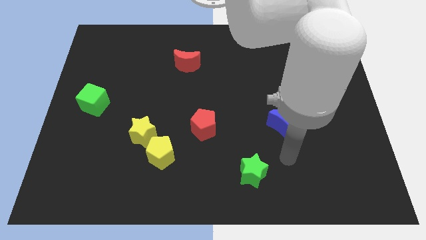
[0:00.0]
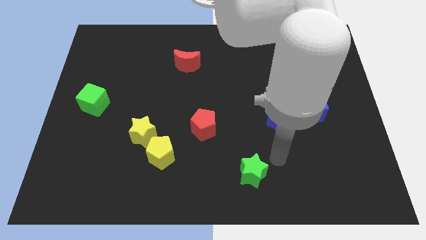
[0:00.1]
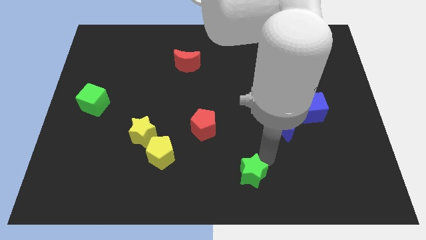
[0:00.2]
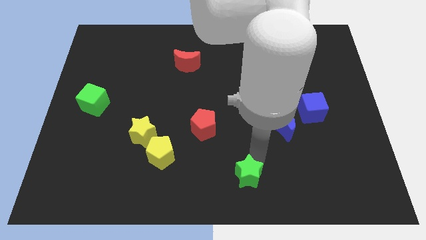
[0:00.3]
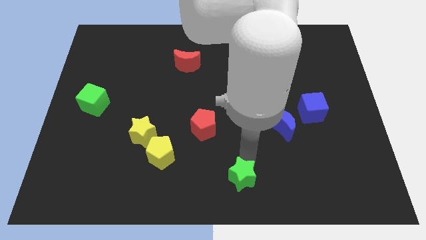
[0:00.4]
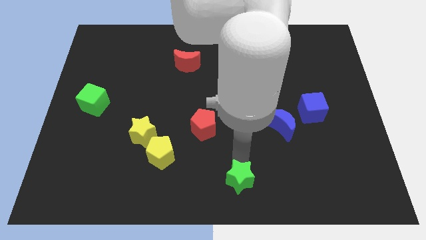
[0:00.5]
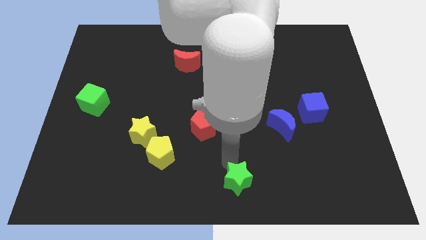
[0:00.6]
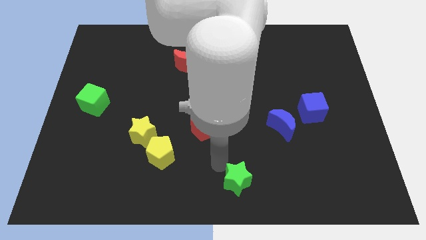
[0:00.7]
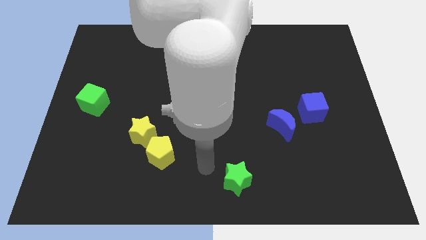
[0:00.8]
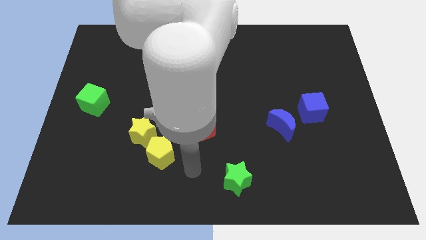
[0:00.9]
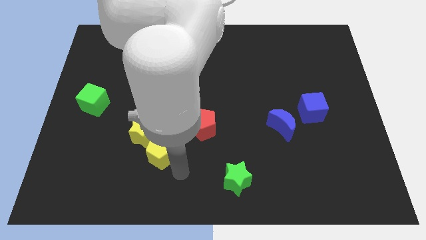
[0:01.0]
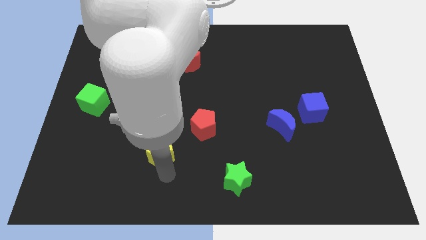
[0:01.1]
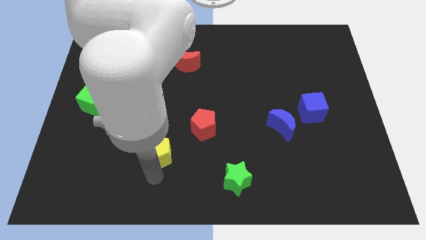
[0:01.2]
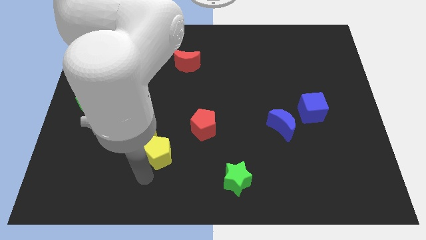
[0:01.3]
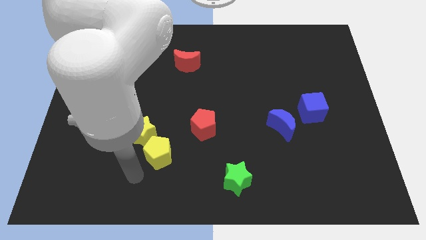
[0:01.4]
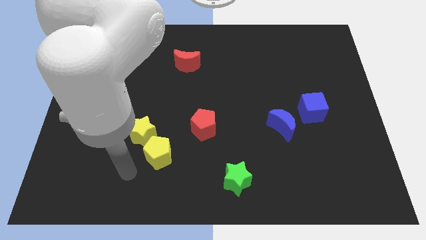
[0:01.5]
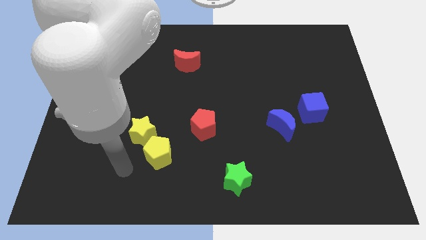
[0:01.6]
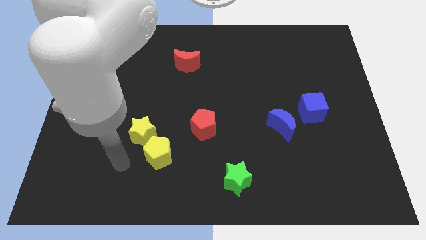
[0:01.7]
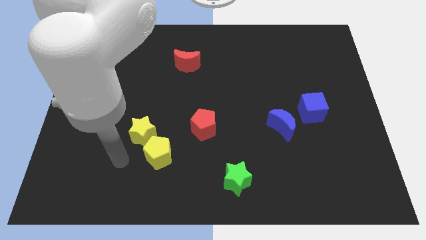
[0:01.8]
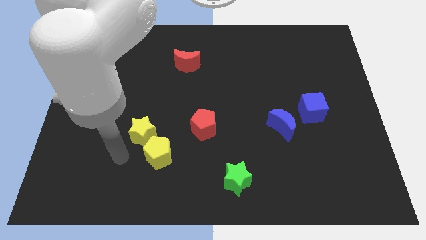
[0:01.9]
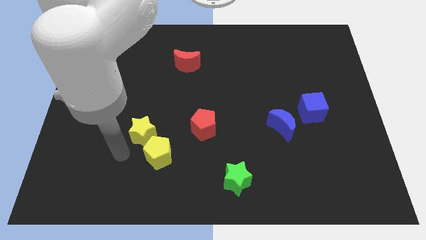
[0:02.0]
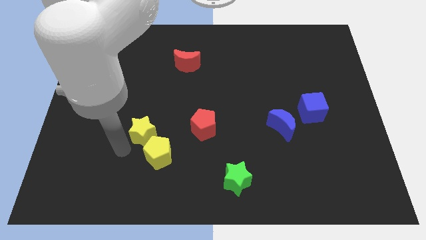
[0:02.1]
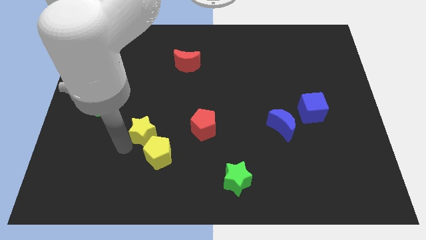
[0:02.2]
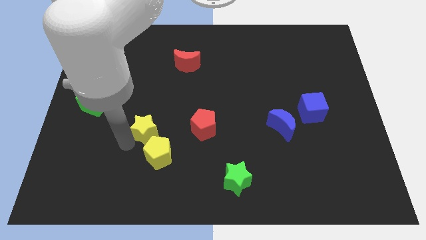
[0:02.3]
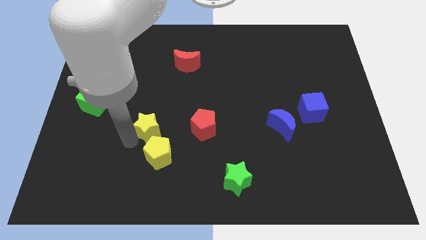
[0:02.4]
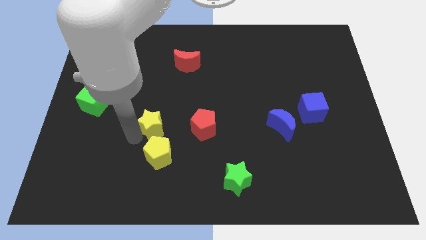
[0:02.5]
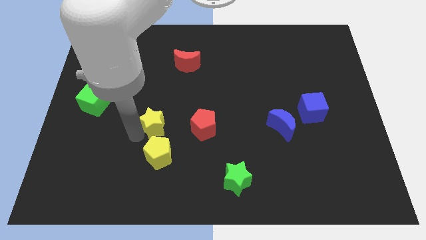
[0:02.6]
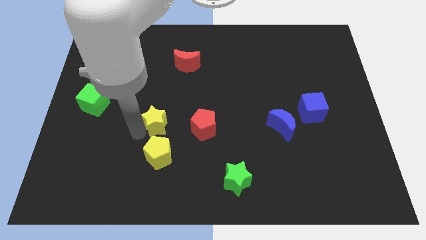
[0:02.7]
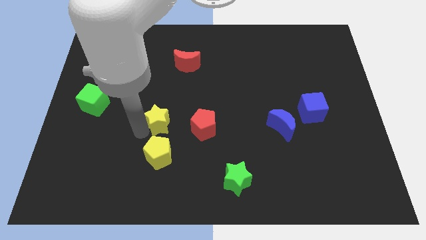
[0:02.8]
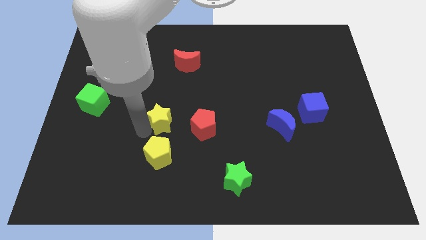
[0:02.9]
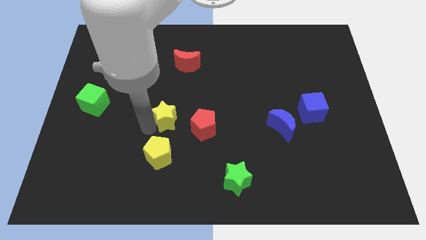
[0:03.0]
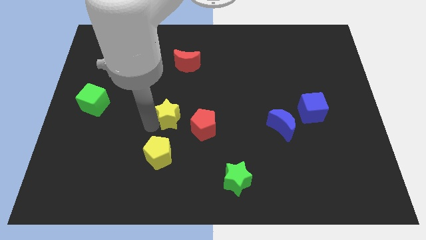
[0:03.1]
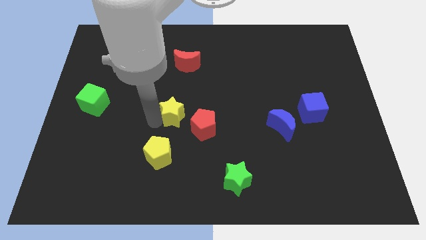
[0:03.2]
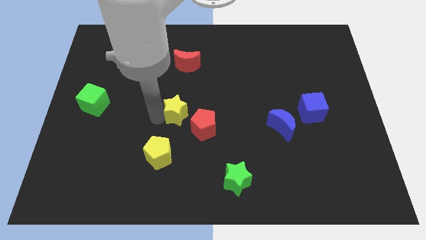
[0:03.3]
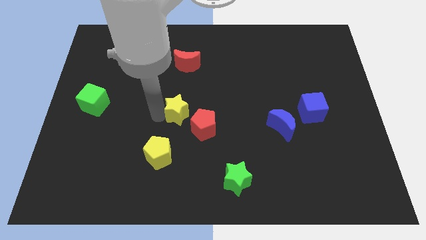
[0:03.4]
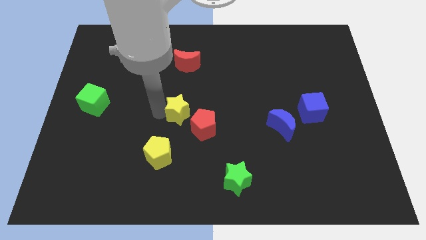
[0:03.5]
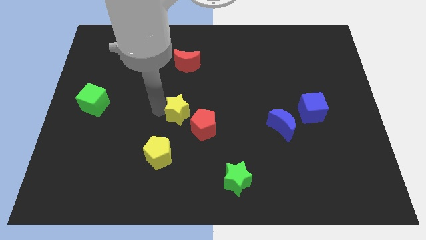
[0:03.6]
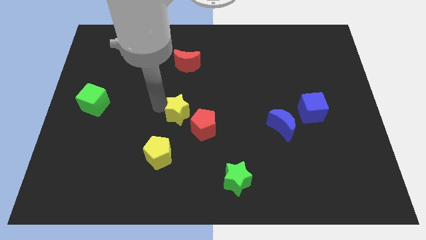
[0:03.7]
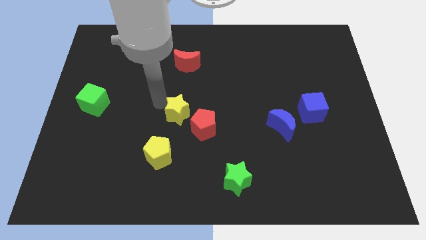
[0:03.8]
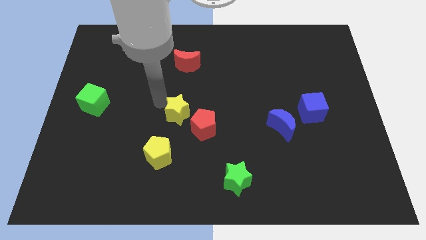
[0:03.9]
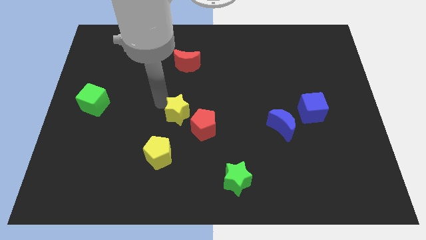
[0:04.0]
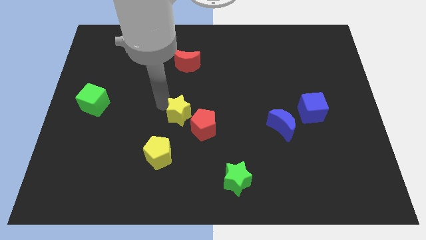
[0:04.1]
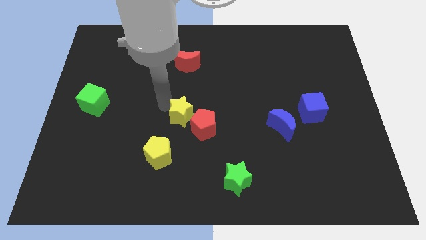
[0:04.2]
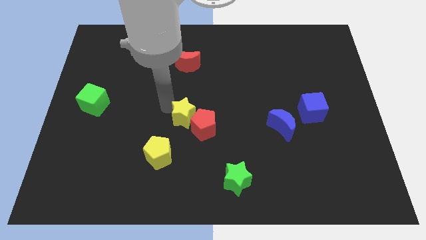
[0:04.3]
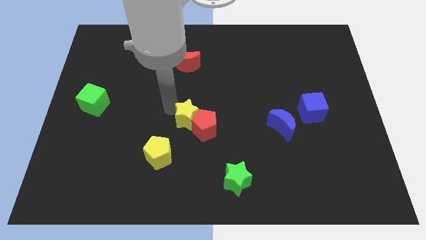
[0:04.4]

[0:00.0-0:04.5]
put the yellow star close to the red pentagon

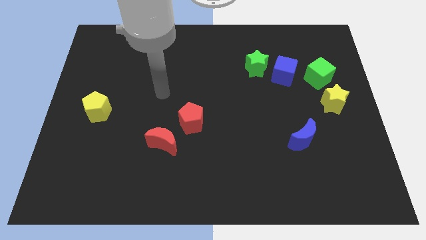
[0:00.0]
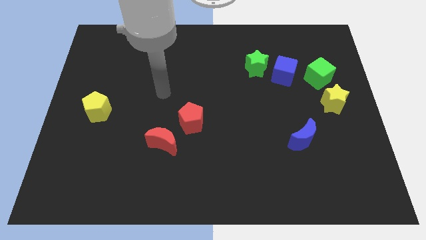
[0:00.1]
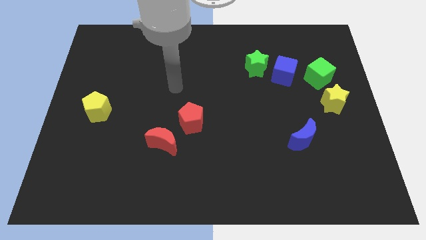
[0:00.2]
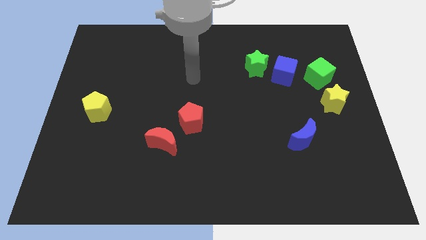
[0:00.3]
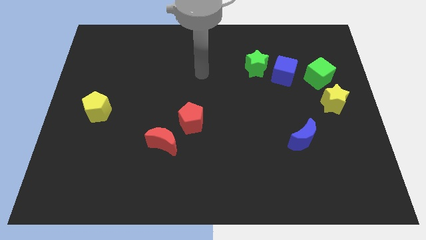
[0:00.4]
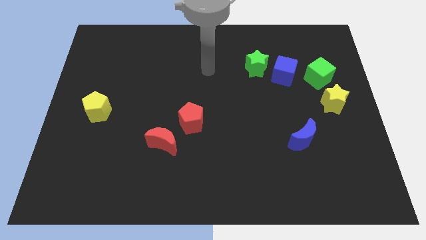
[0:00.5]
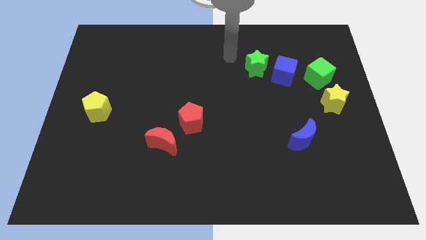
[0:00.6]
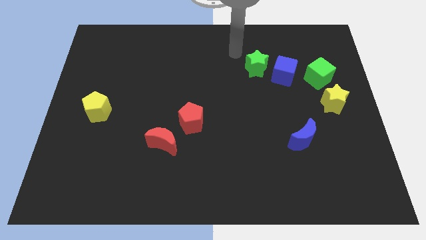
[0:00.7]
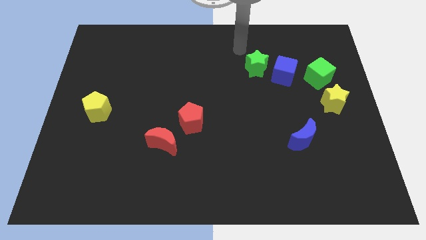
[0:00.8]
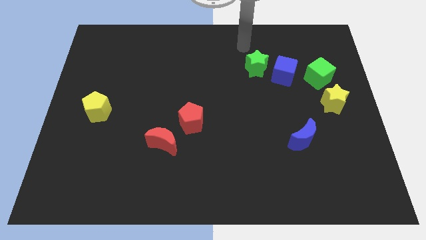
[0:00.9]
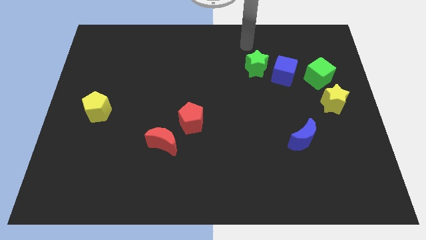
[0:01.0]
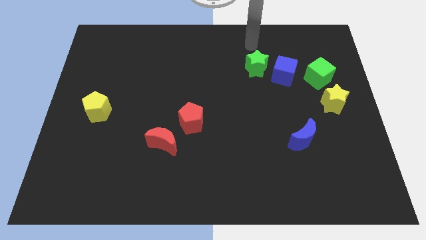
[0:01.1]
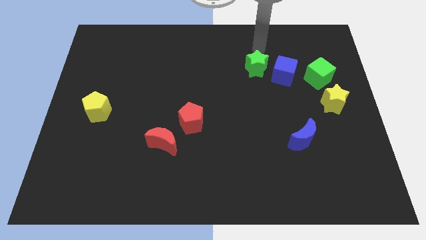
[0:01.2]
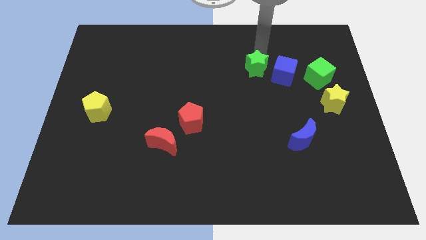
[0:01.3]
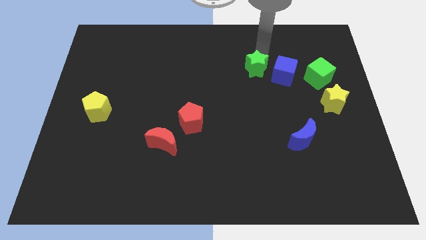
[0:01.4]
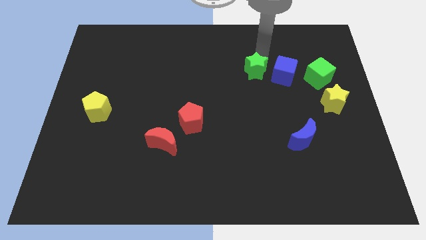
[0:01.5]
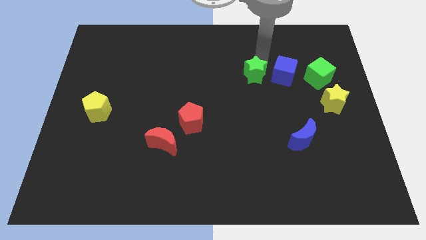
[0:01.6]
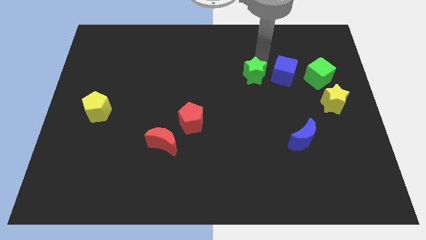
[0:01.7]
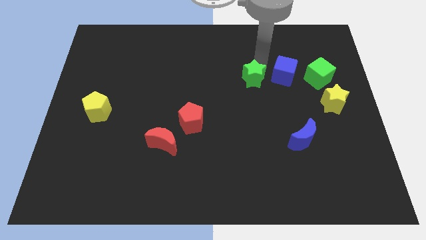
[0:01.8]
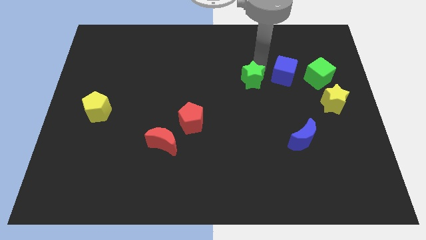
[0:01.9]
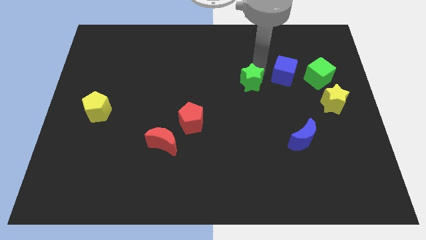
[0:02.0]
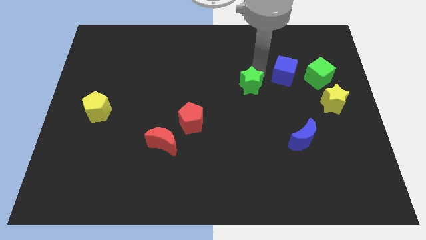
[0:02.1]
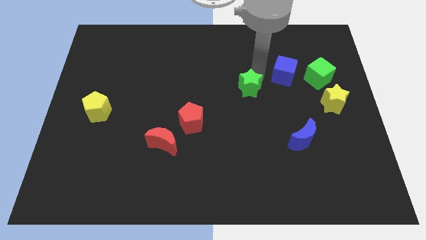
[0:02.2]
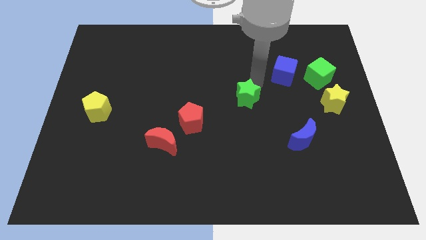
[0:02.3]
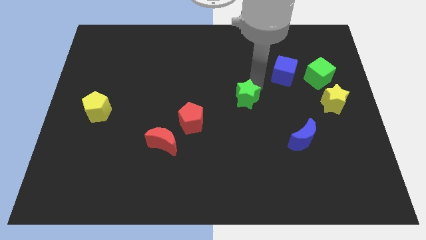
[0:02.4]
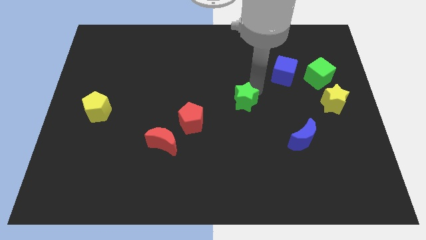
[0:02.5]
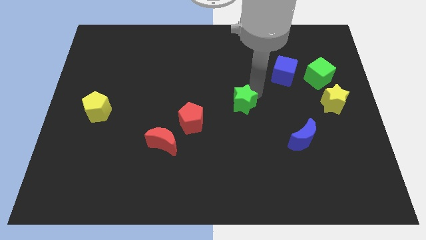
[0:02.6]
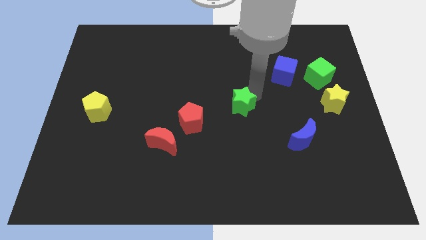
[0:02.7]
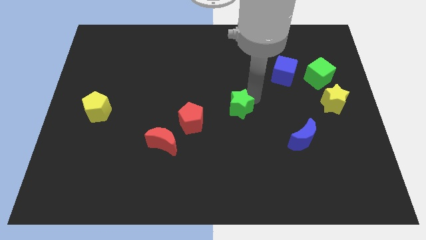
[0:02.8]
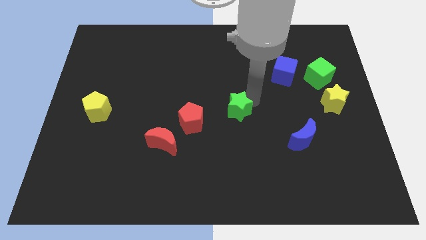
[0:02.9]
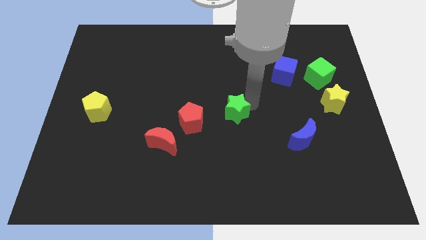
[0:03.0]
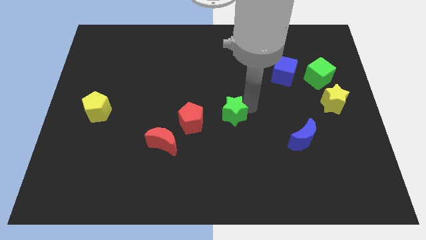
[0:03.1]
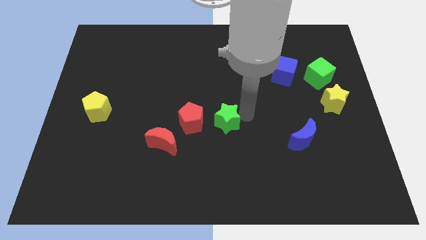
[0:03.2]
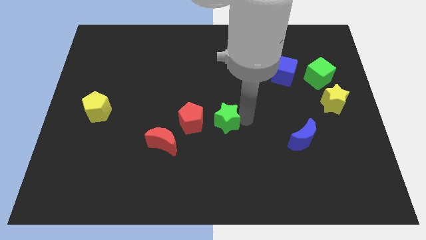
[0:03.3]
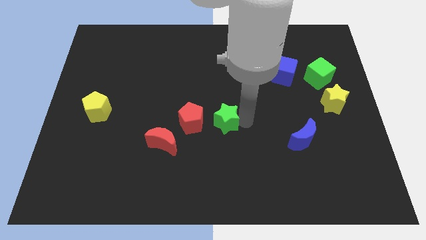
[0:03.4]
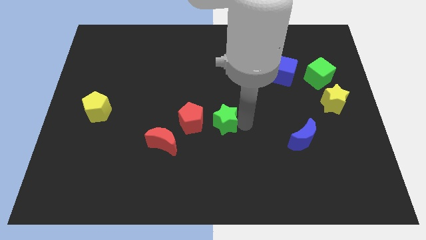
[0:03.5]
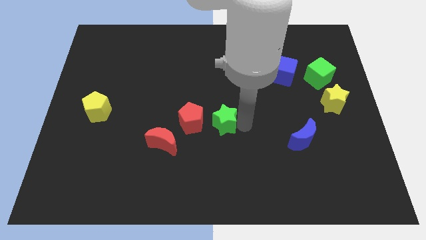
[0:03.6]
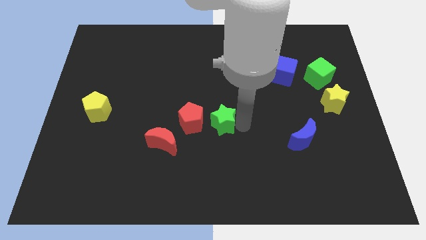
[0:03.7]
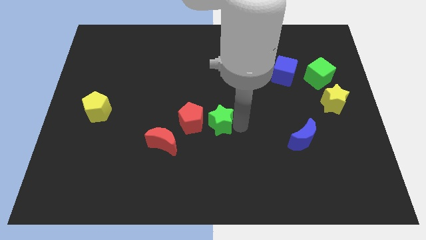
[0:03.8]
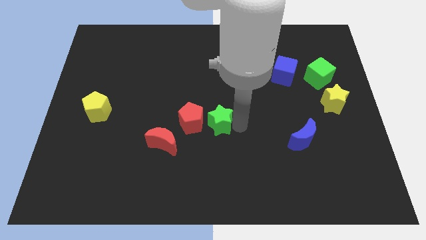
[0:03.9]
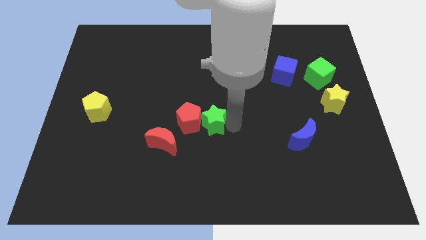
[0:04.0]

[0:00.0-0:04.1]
slide the green star towards the red pentagon
